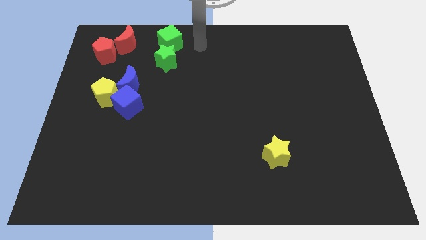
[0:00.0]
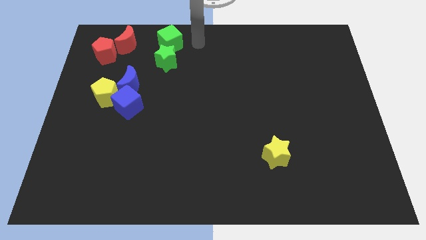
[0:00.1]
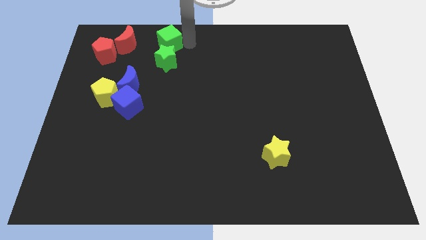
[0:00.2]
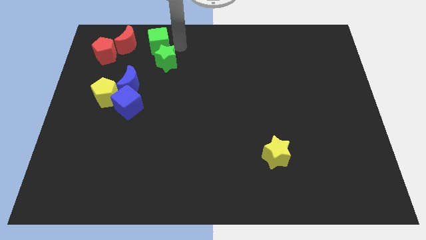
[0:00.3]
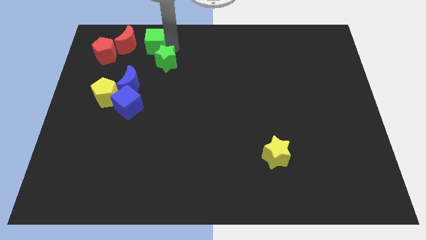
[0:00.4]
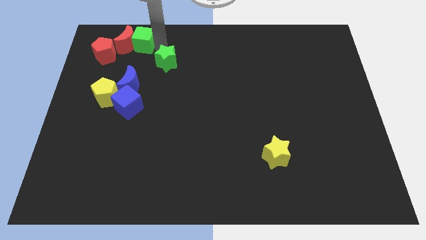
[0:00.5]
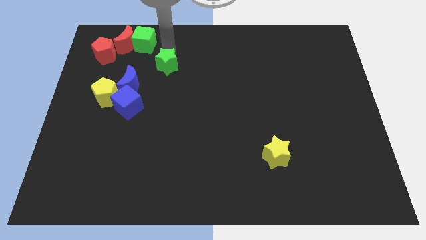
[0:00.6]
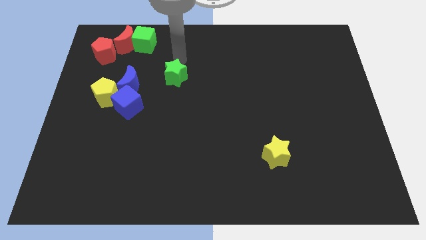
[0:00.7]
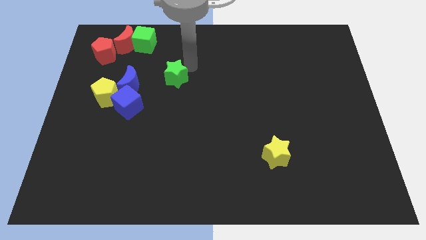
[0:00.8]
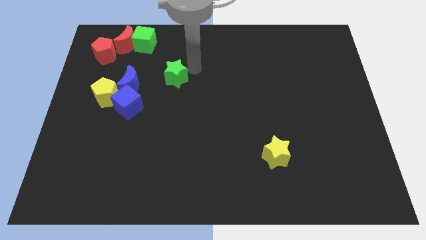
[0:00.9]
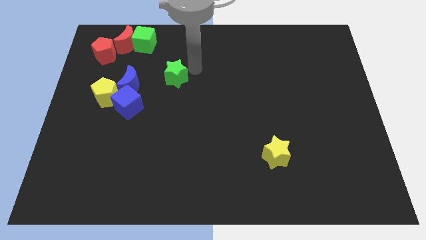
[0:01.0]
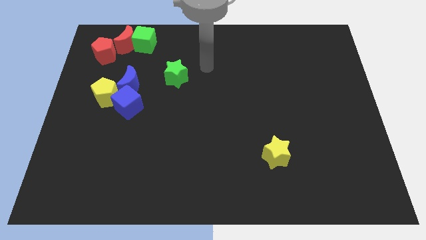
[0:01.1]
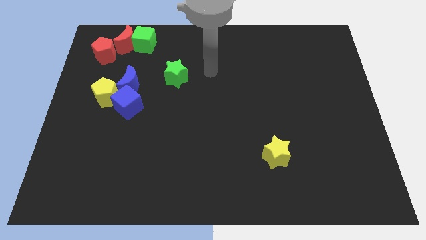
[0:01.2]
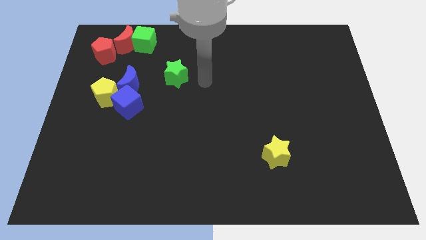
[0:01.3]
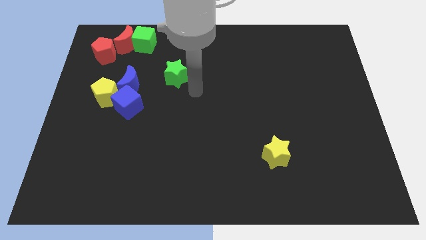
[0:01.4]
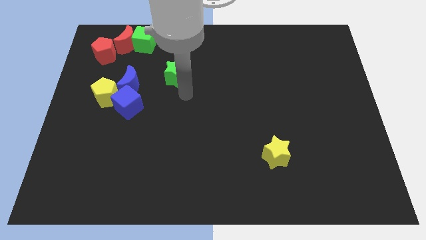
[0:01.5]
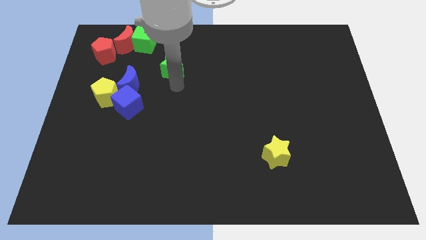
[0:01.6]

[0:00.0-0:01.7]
drag the green cube close to the red moon

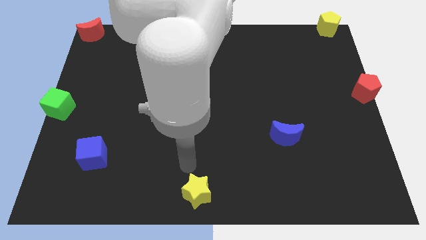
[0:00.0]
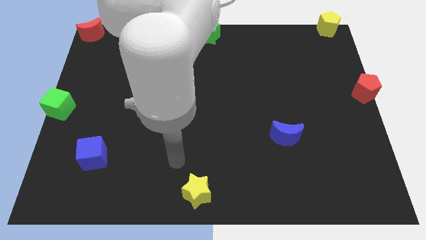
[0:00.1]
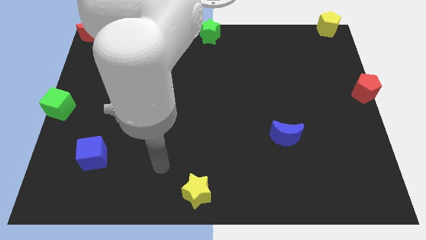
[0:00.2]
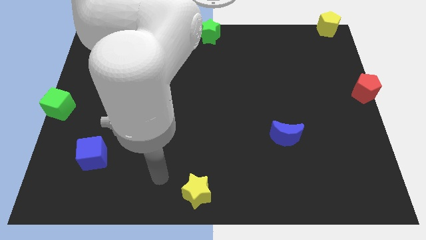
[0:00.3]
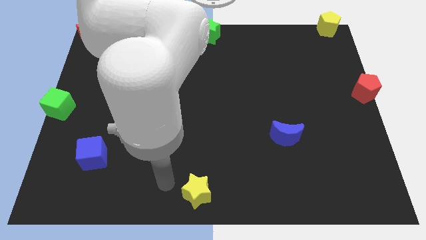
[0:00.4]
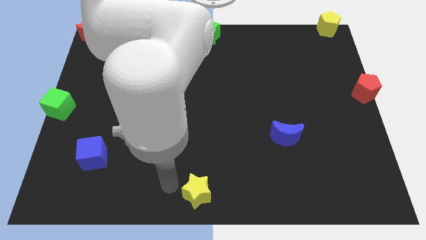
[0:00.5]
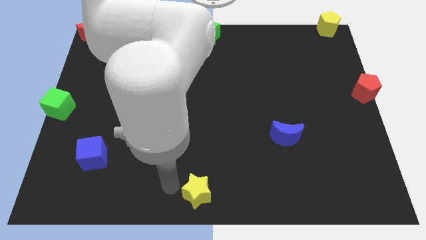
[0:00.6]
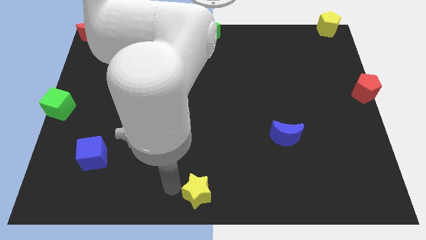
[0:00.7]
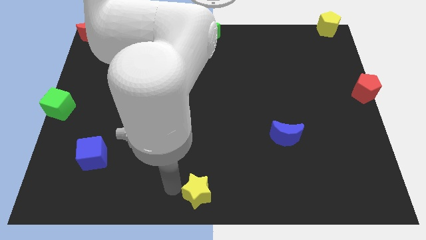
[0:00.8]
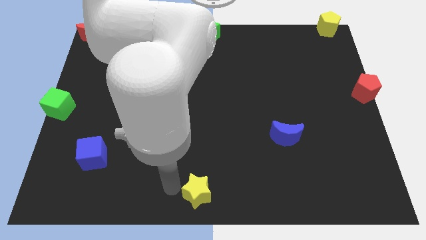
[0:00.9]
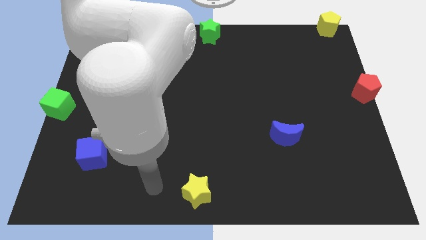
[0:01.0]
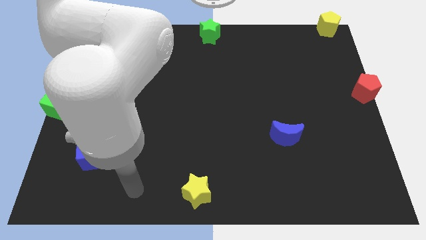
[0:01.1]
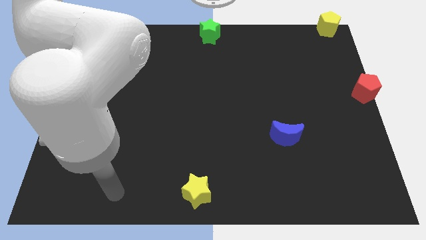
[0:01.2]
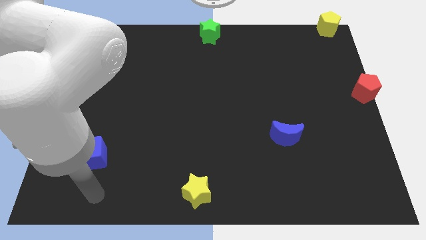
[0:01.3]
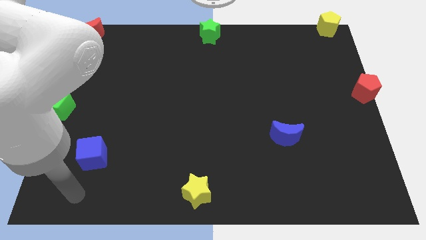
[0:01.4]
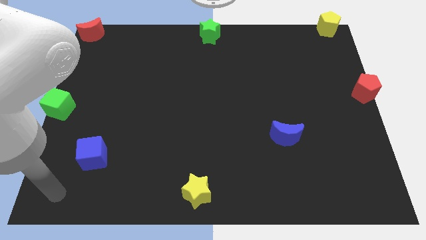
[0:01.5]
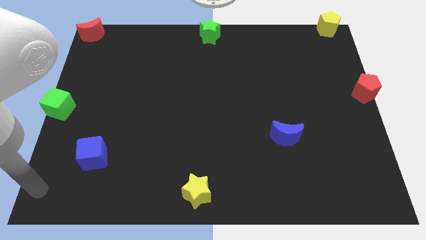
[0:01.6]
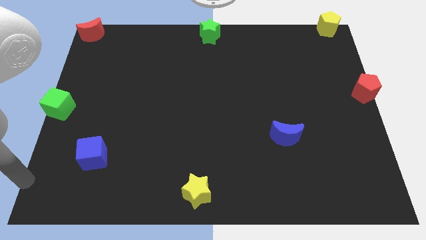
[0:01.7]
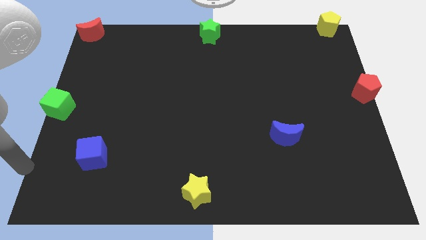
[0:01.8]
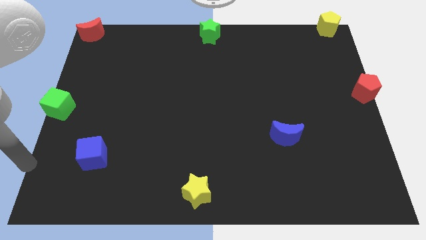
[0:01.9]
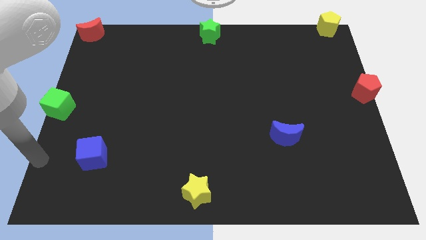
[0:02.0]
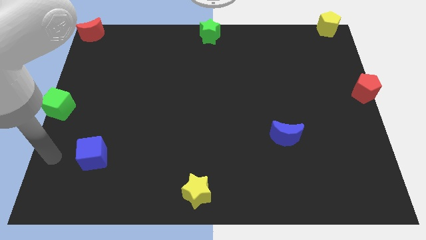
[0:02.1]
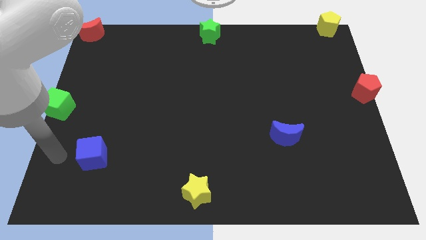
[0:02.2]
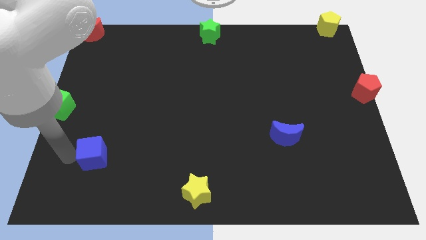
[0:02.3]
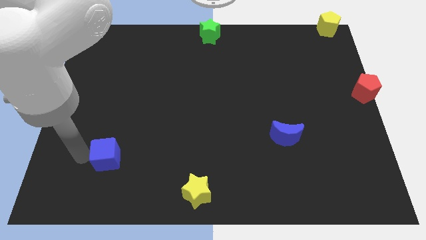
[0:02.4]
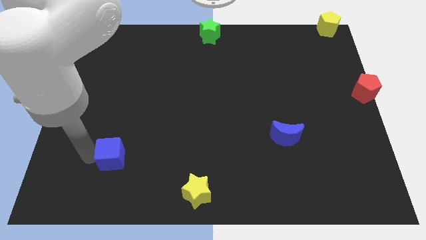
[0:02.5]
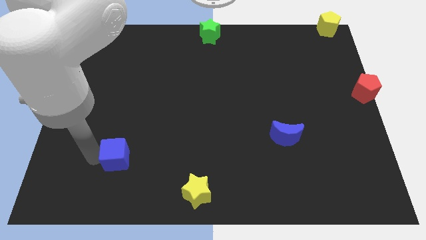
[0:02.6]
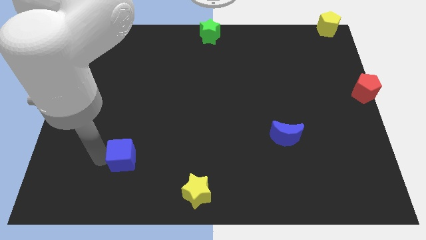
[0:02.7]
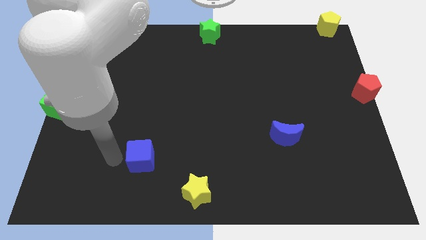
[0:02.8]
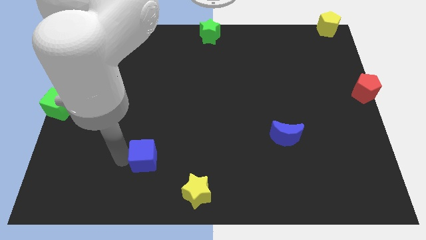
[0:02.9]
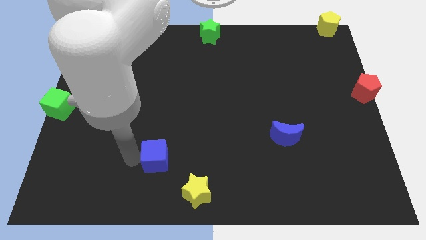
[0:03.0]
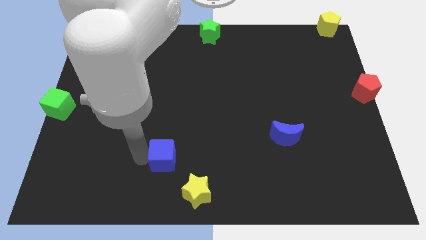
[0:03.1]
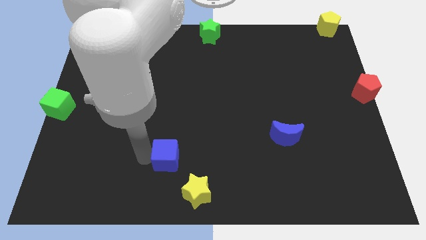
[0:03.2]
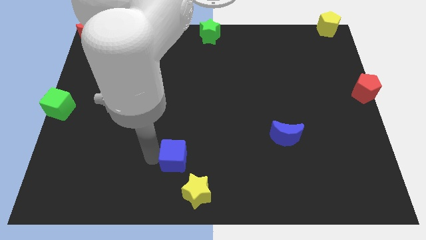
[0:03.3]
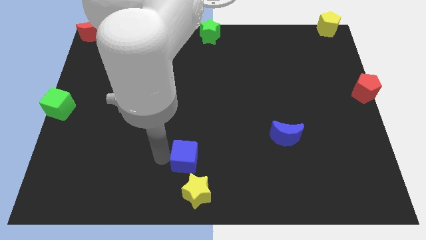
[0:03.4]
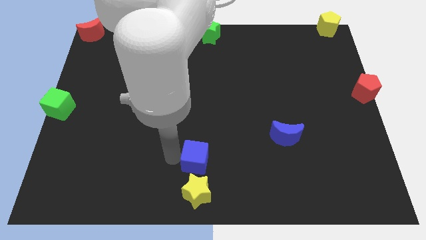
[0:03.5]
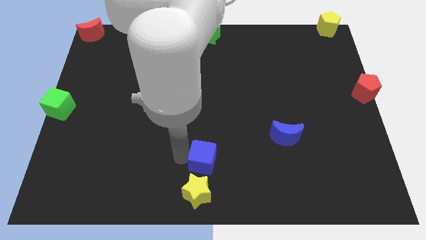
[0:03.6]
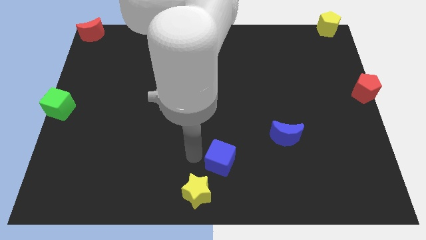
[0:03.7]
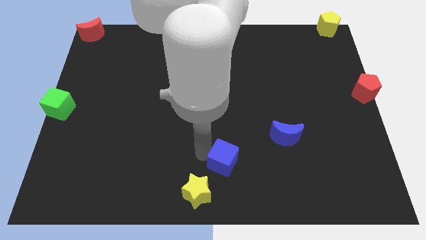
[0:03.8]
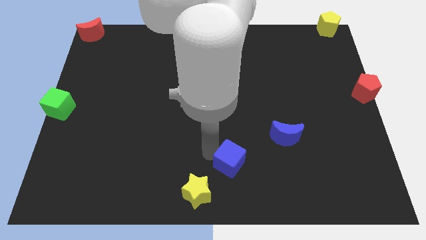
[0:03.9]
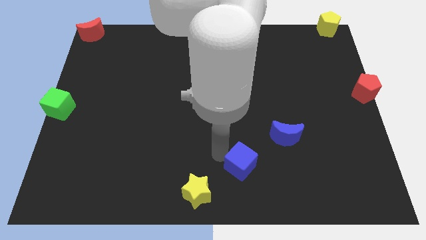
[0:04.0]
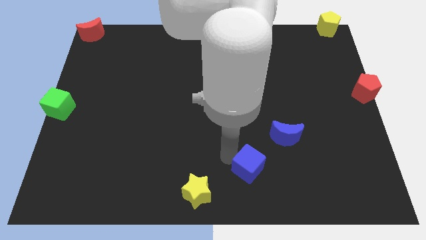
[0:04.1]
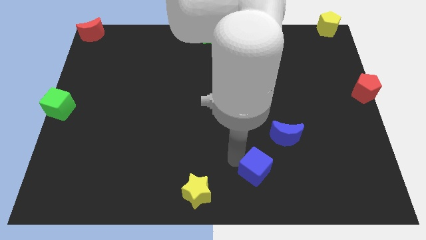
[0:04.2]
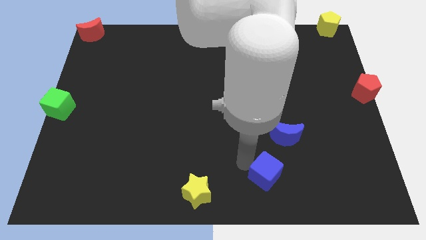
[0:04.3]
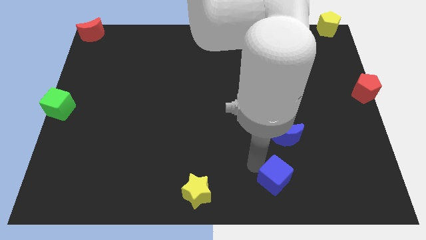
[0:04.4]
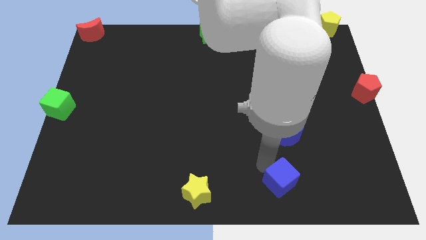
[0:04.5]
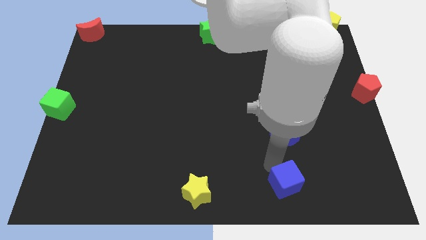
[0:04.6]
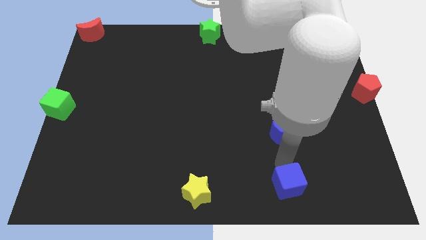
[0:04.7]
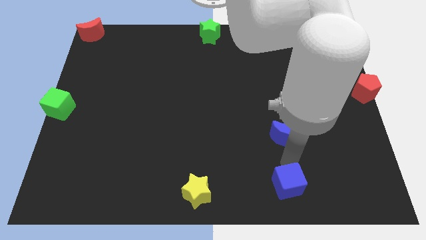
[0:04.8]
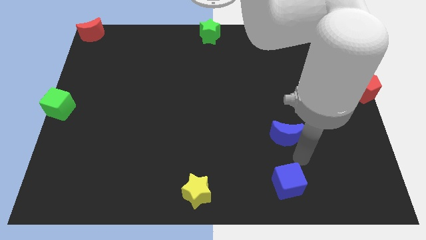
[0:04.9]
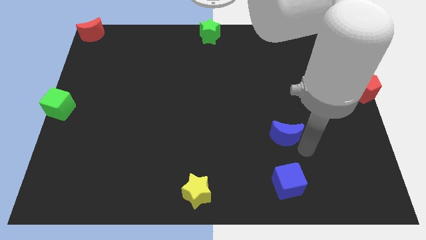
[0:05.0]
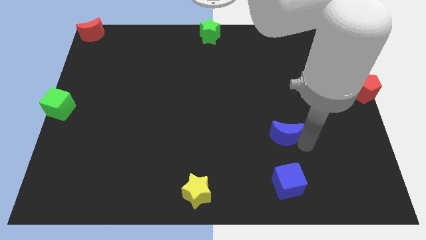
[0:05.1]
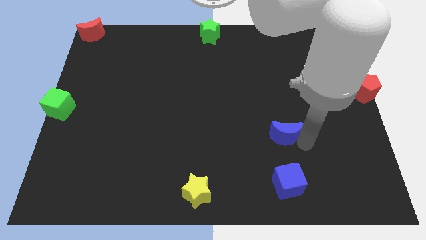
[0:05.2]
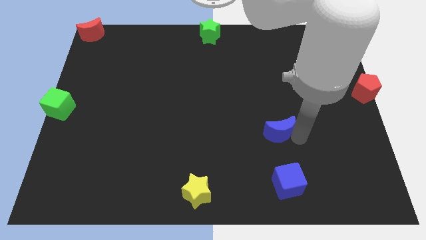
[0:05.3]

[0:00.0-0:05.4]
push the blue cube to the bottom center of the board

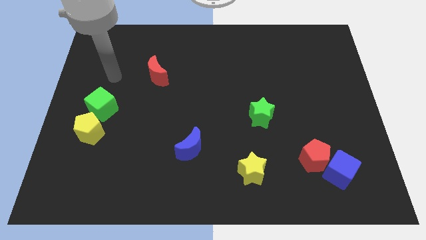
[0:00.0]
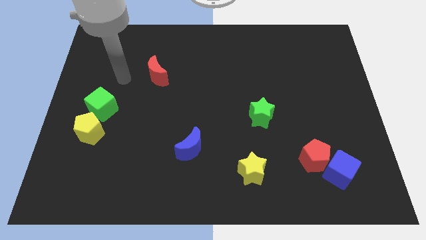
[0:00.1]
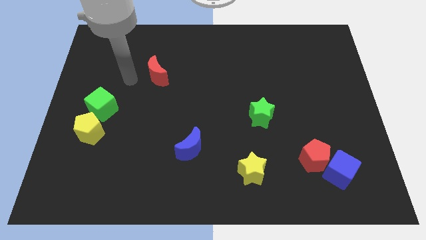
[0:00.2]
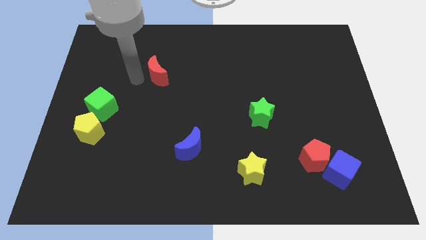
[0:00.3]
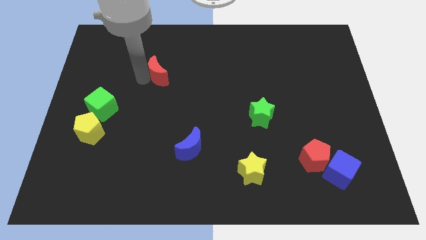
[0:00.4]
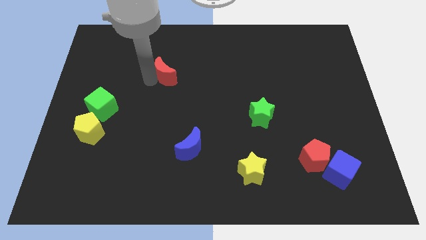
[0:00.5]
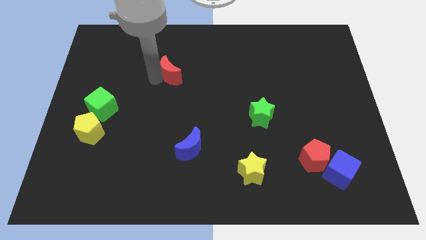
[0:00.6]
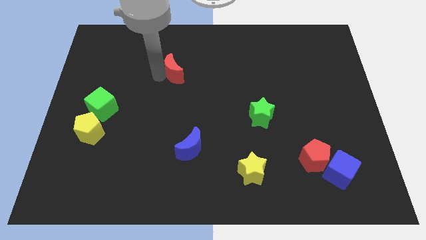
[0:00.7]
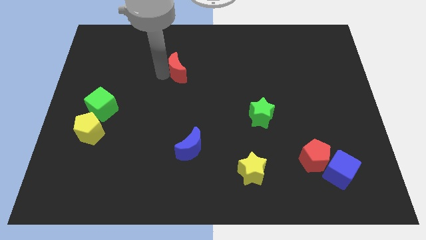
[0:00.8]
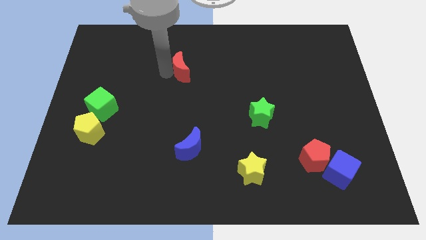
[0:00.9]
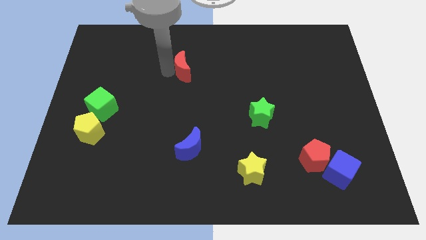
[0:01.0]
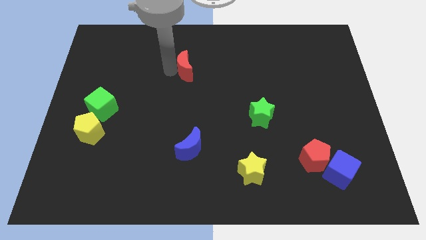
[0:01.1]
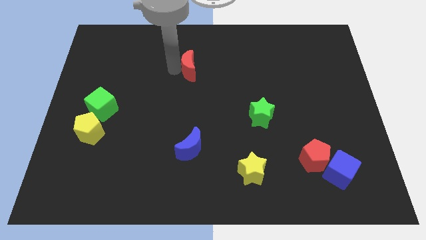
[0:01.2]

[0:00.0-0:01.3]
place the red crescent vertically above the blue moon

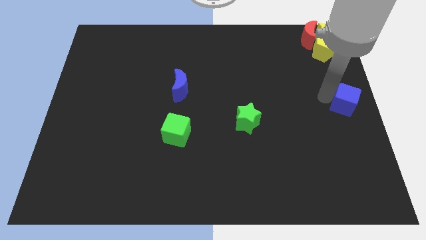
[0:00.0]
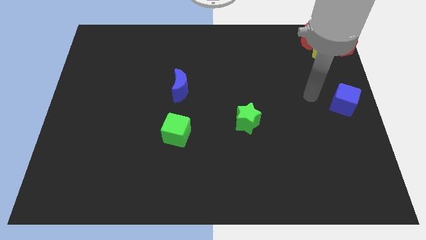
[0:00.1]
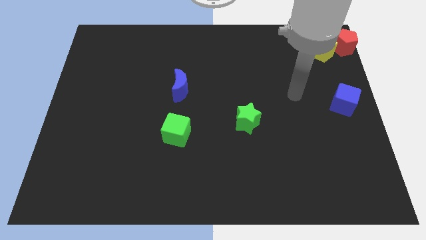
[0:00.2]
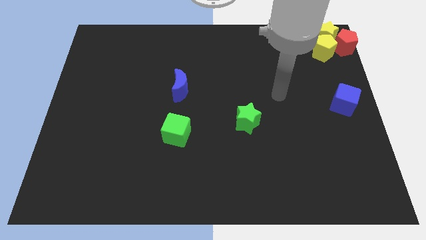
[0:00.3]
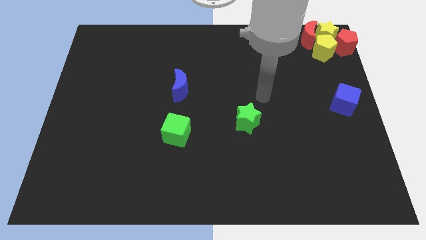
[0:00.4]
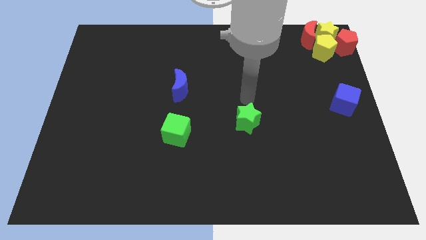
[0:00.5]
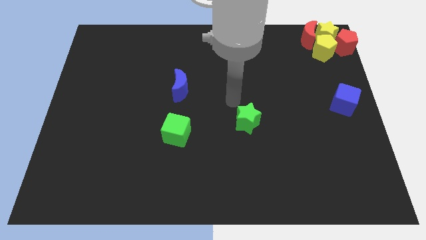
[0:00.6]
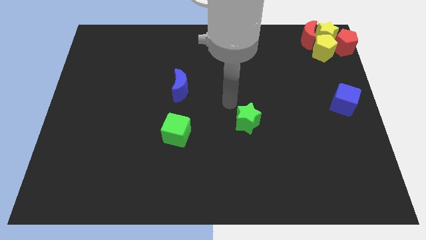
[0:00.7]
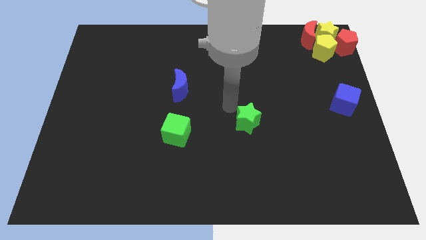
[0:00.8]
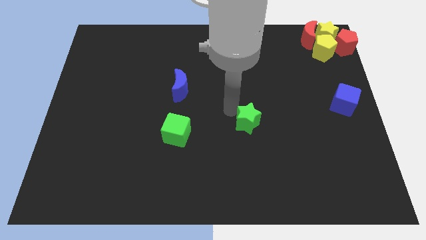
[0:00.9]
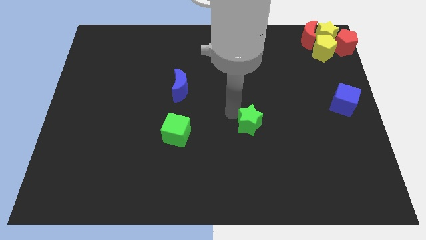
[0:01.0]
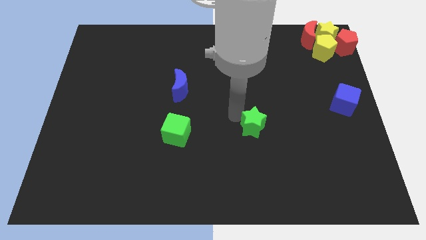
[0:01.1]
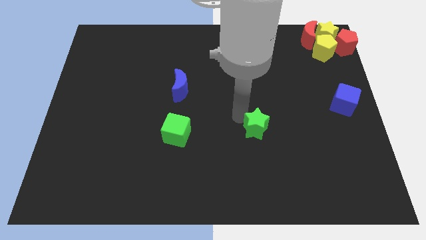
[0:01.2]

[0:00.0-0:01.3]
move your arm away from blue cube
